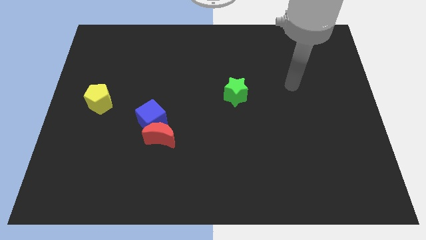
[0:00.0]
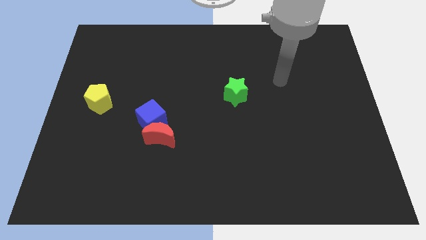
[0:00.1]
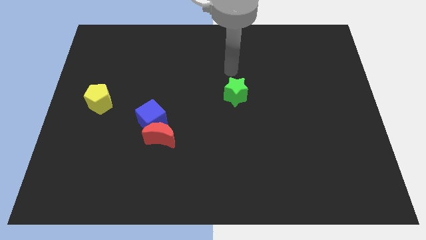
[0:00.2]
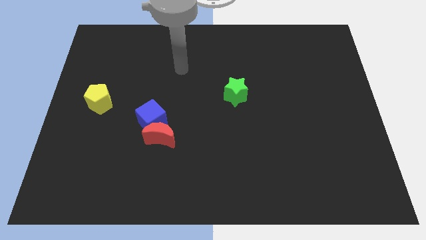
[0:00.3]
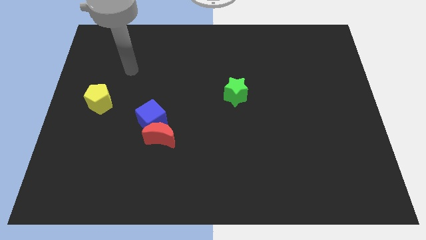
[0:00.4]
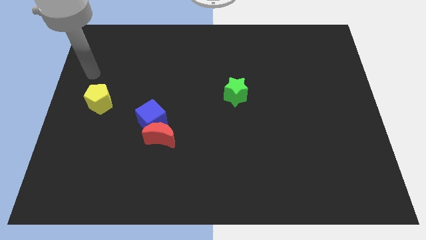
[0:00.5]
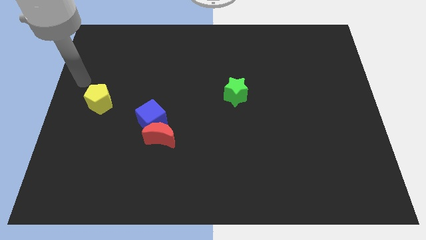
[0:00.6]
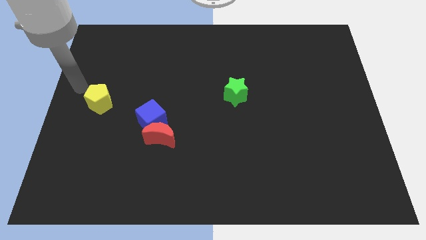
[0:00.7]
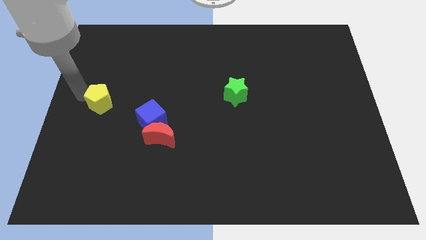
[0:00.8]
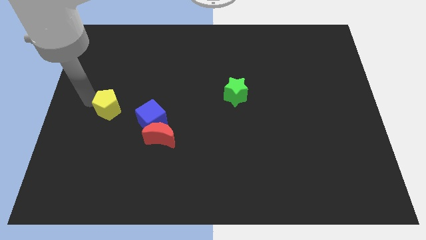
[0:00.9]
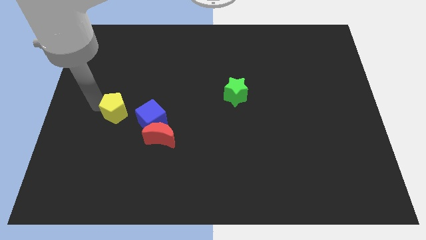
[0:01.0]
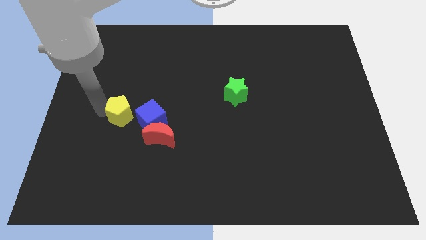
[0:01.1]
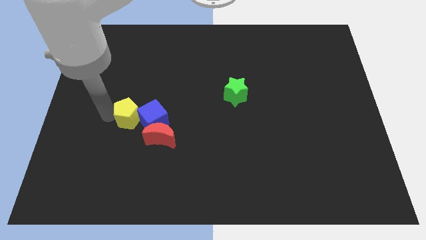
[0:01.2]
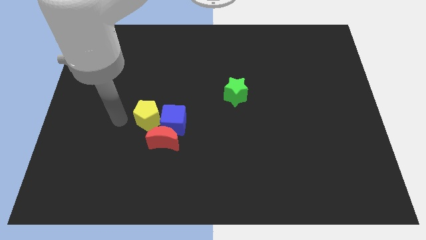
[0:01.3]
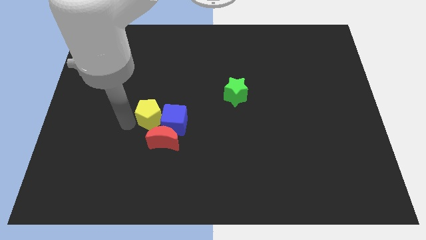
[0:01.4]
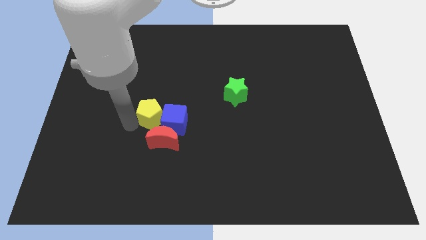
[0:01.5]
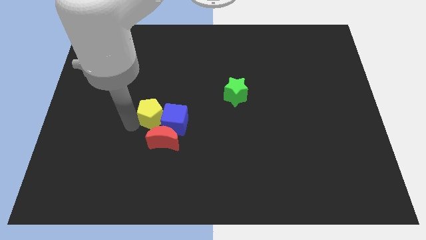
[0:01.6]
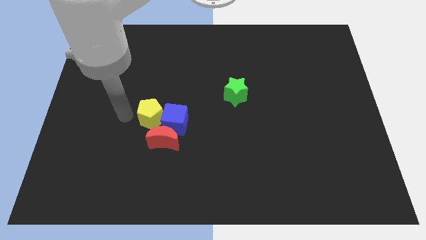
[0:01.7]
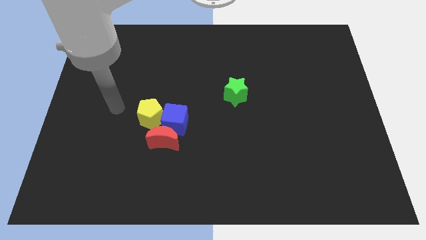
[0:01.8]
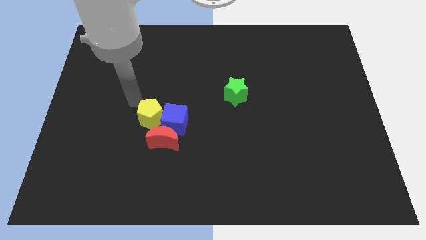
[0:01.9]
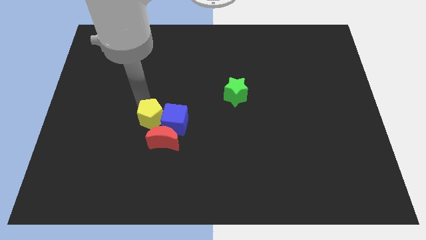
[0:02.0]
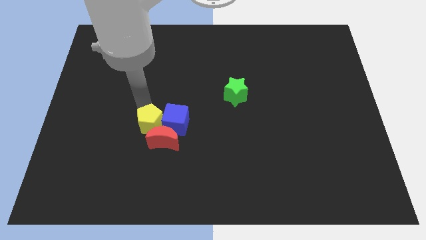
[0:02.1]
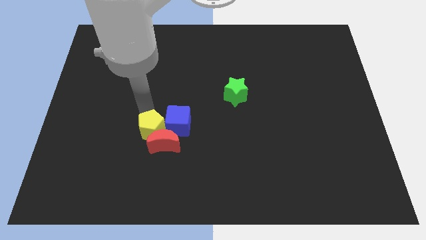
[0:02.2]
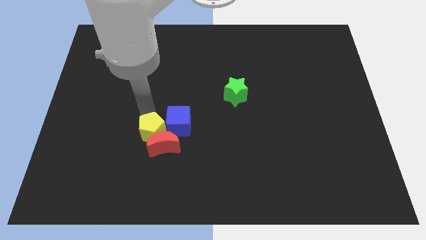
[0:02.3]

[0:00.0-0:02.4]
move the pentagon towards the red block

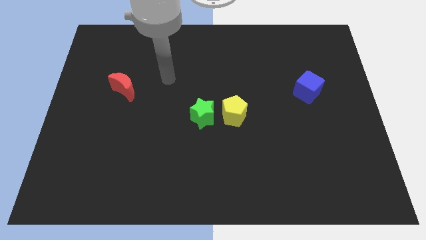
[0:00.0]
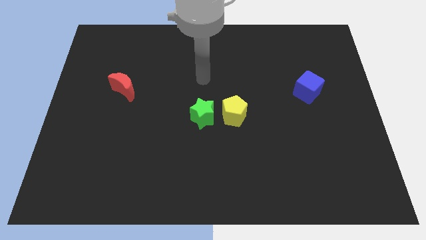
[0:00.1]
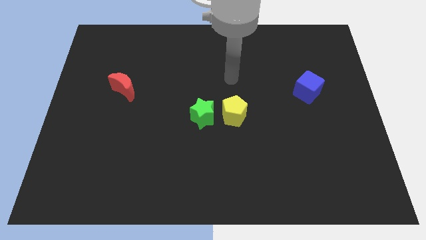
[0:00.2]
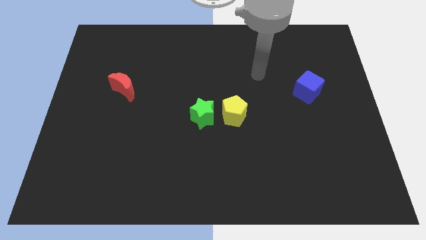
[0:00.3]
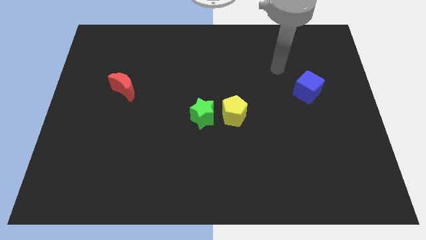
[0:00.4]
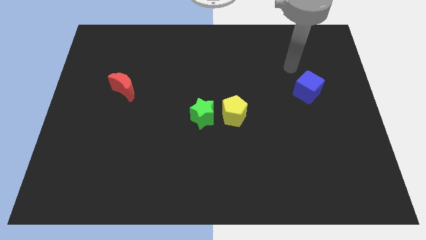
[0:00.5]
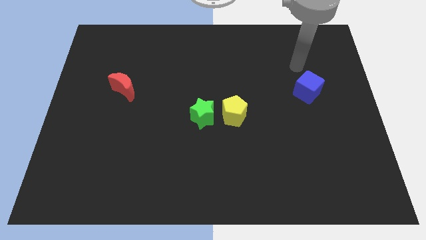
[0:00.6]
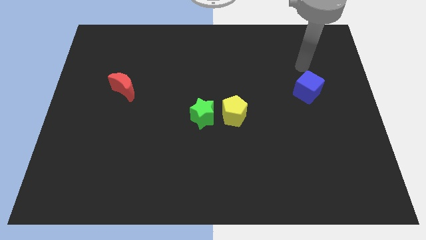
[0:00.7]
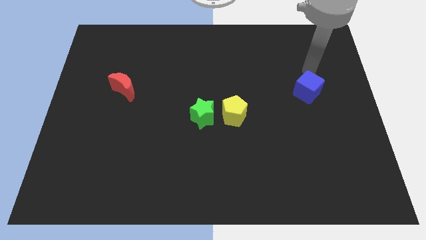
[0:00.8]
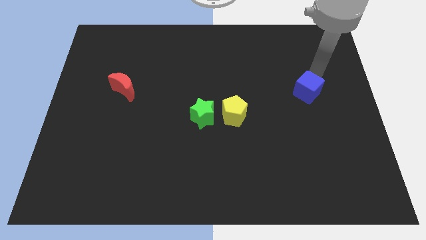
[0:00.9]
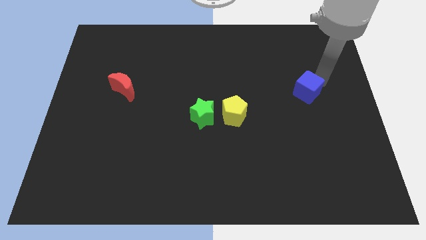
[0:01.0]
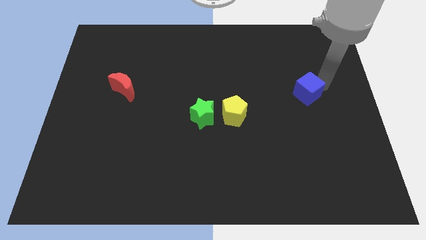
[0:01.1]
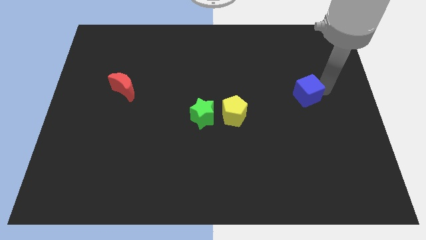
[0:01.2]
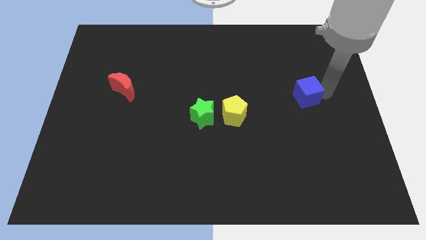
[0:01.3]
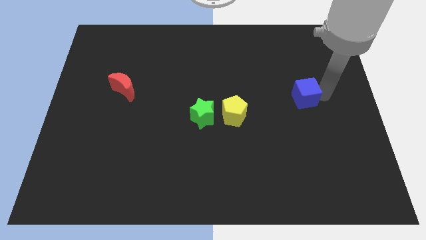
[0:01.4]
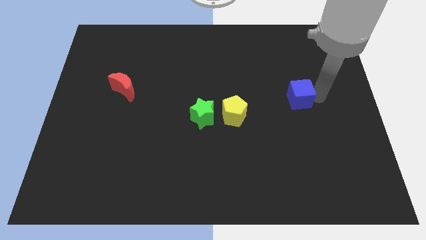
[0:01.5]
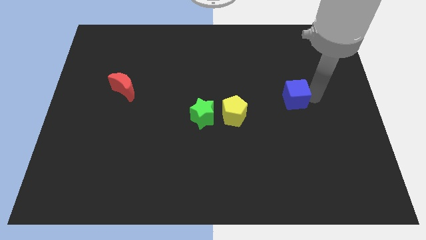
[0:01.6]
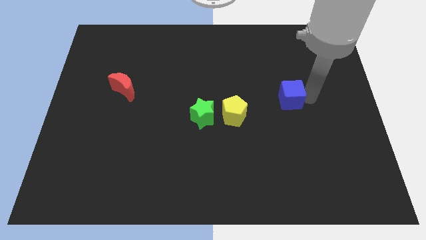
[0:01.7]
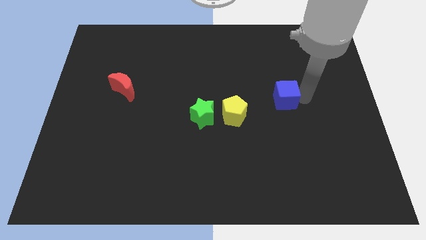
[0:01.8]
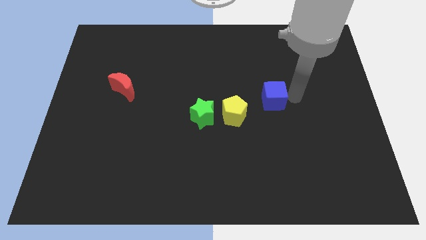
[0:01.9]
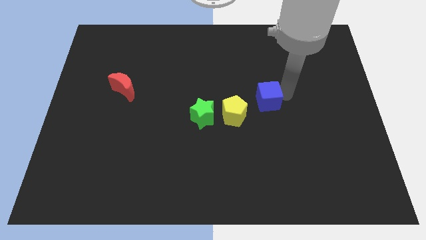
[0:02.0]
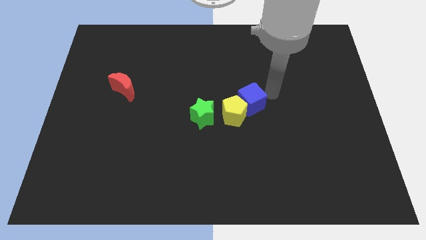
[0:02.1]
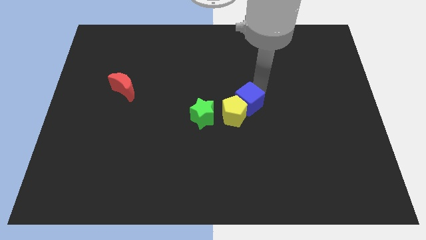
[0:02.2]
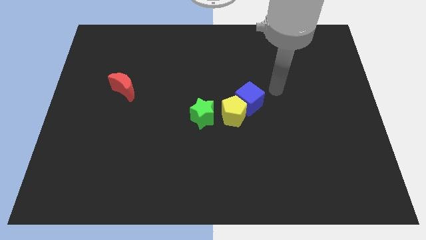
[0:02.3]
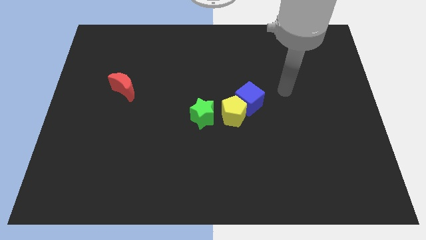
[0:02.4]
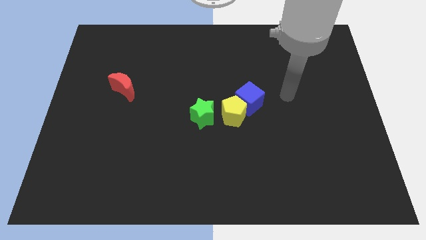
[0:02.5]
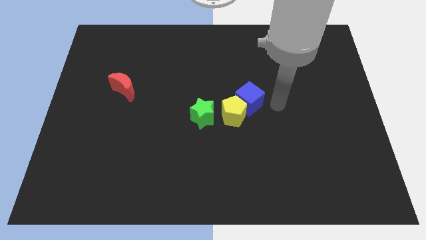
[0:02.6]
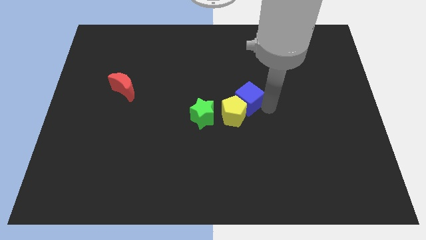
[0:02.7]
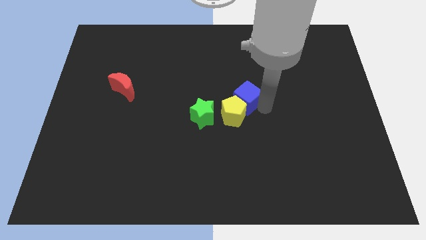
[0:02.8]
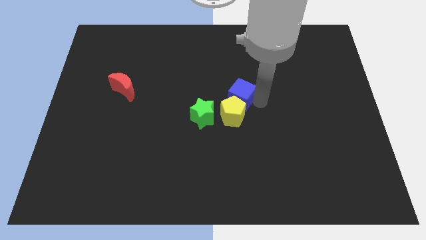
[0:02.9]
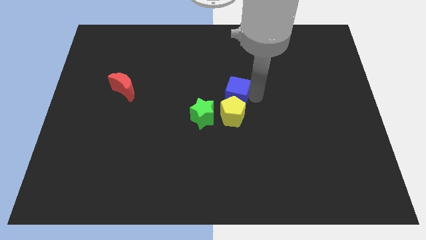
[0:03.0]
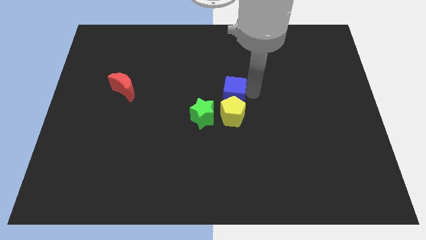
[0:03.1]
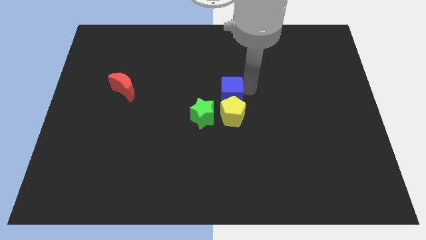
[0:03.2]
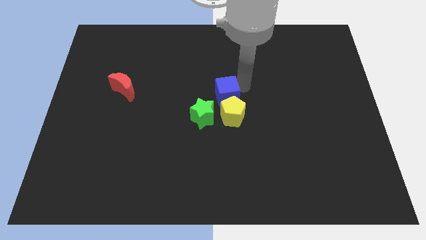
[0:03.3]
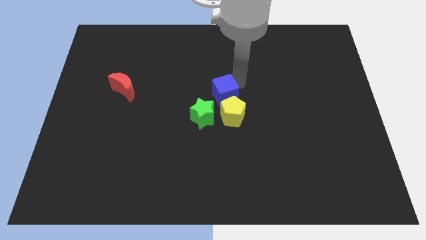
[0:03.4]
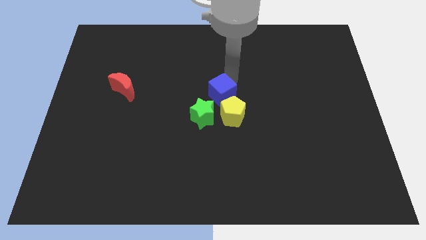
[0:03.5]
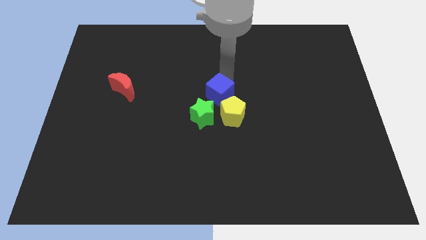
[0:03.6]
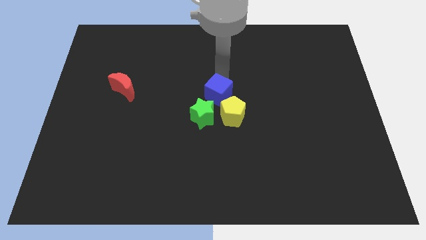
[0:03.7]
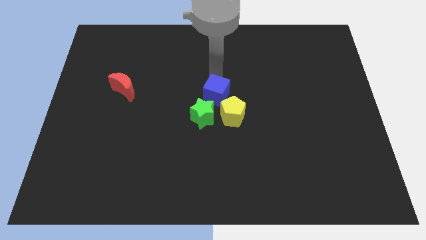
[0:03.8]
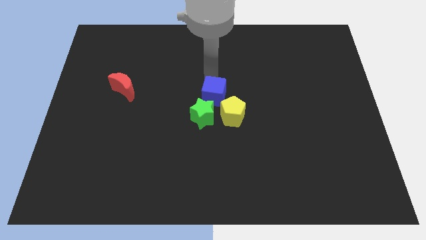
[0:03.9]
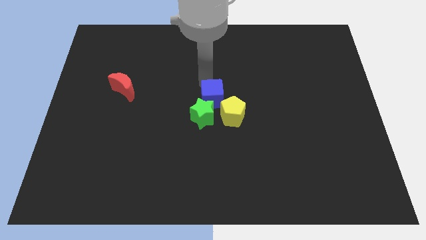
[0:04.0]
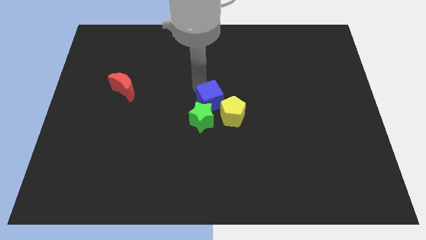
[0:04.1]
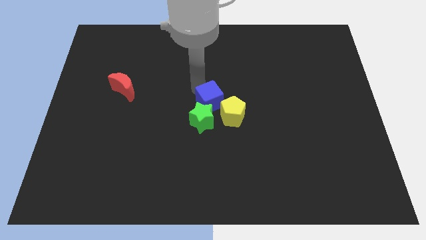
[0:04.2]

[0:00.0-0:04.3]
move the blue block to the star

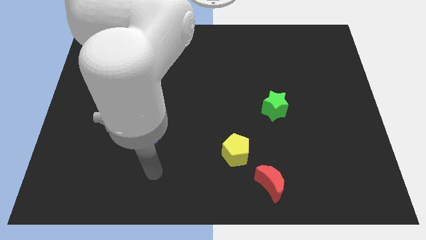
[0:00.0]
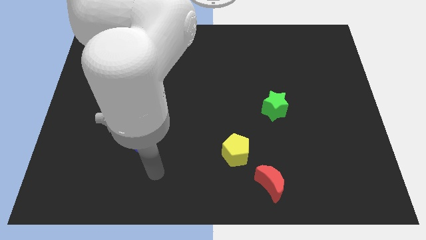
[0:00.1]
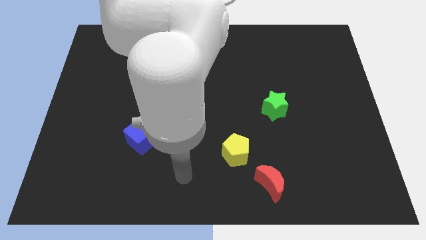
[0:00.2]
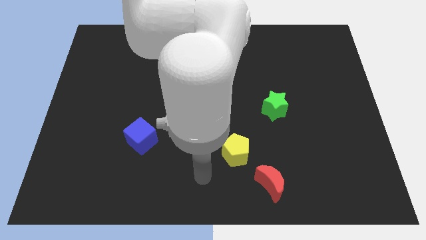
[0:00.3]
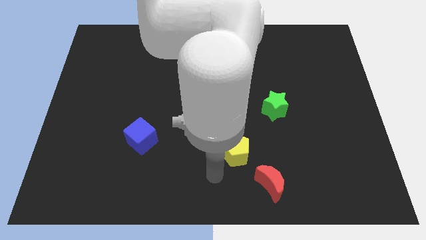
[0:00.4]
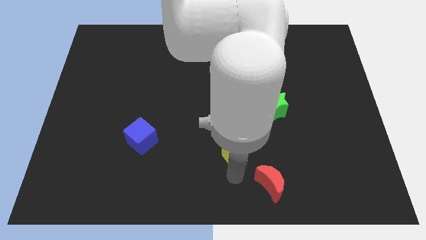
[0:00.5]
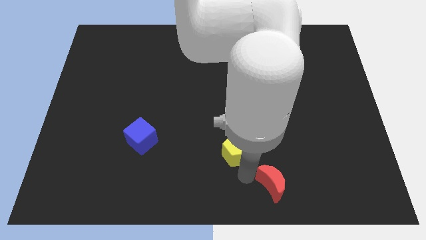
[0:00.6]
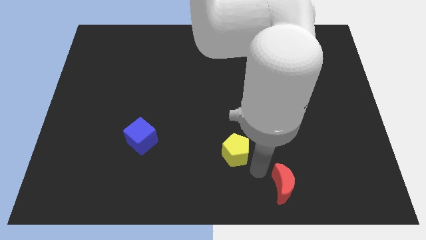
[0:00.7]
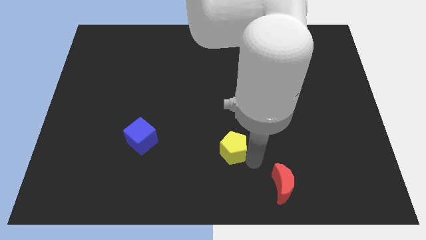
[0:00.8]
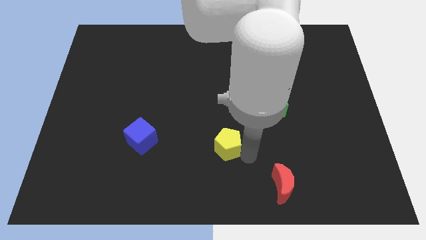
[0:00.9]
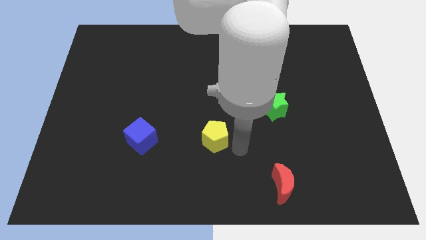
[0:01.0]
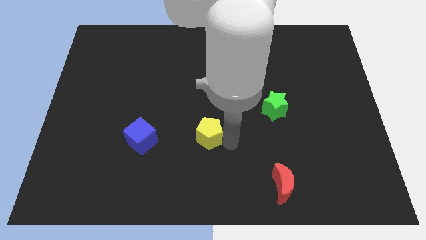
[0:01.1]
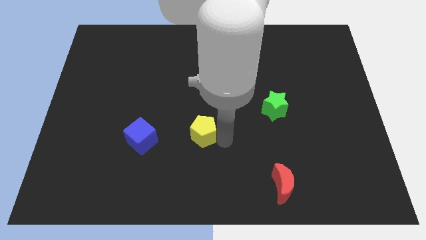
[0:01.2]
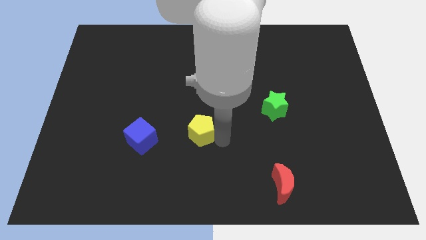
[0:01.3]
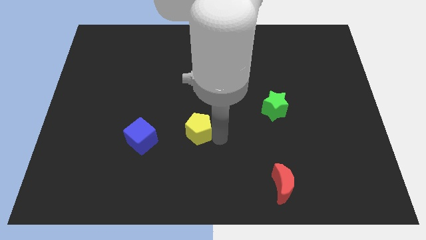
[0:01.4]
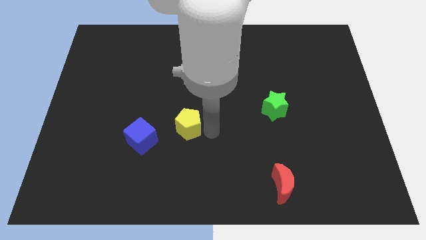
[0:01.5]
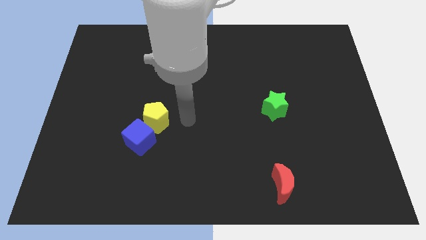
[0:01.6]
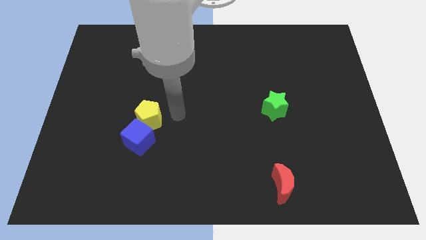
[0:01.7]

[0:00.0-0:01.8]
slide the yellow pentagon to the blue block

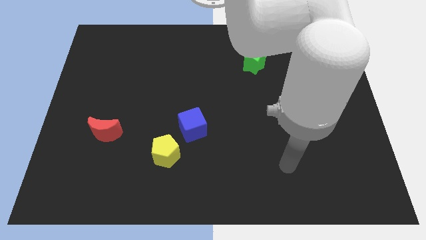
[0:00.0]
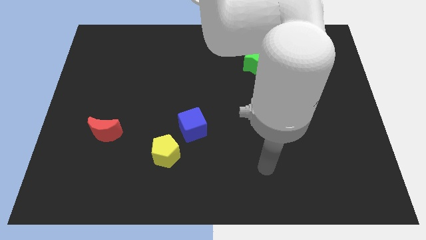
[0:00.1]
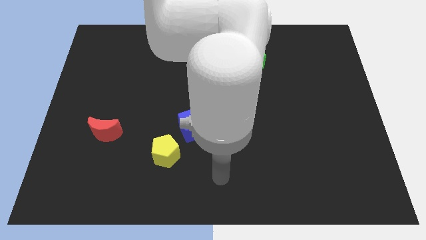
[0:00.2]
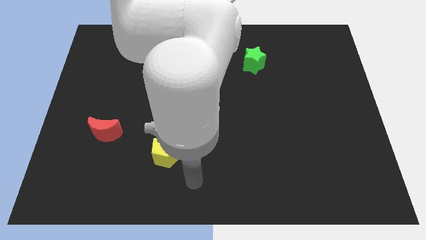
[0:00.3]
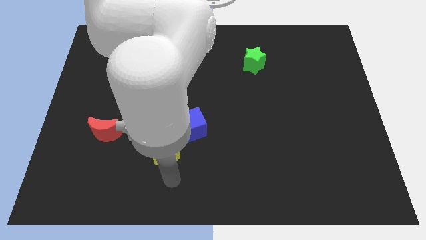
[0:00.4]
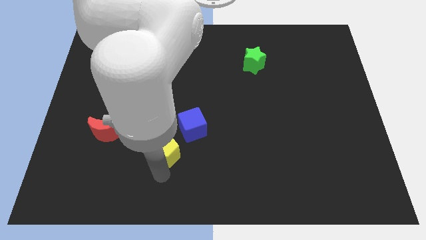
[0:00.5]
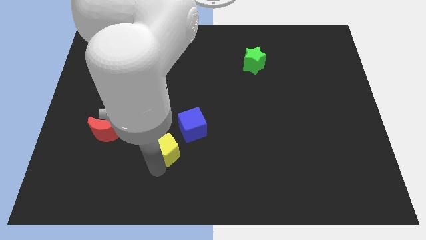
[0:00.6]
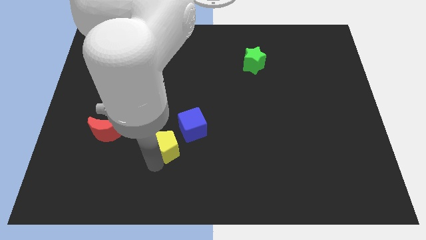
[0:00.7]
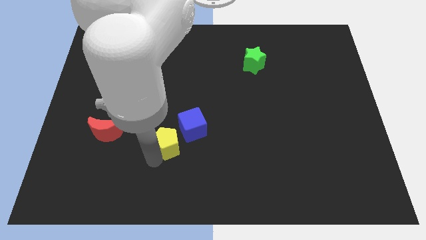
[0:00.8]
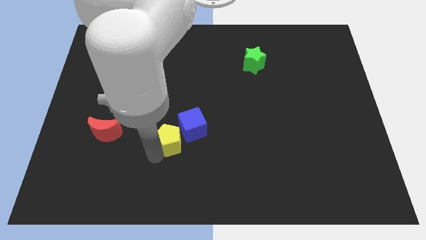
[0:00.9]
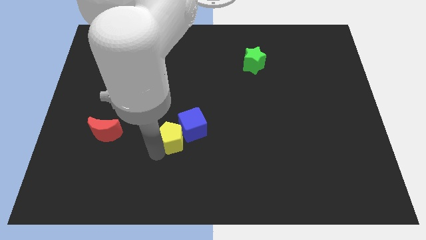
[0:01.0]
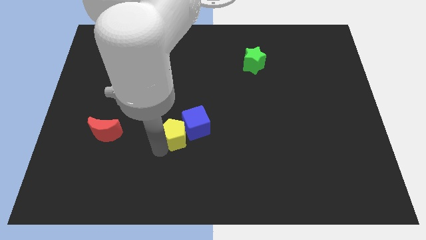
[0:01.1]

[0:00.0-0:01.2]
push the yellow pentagon close to the blue block
